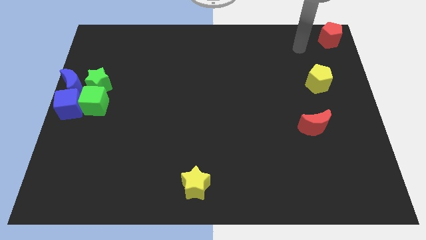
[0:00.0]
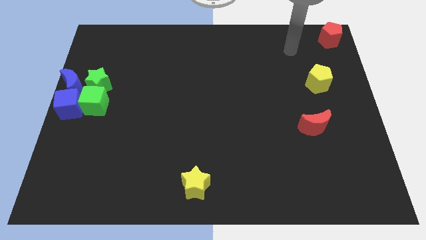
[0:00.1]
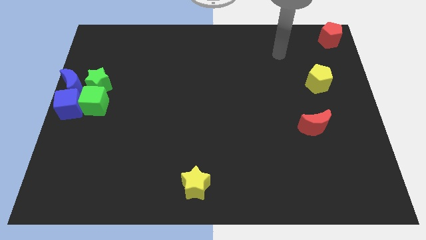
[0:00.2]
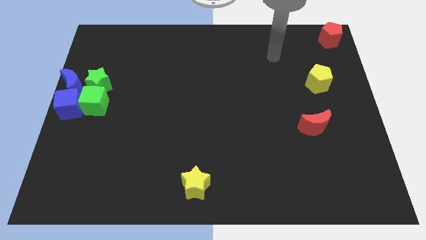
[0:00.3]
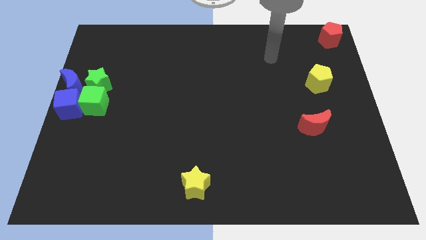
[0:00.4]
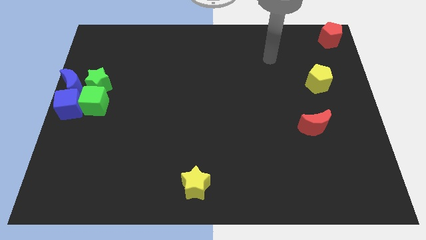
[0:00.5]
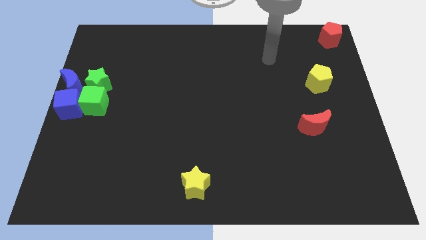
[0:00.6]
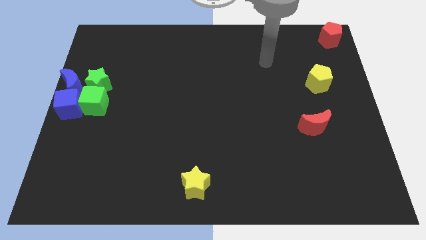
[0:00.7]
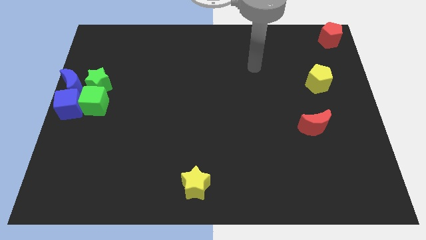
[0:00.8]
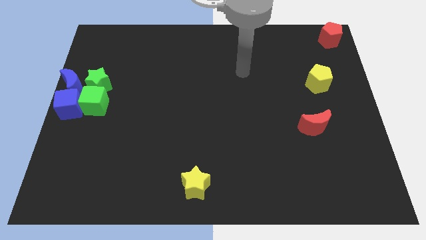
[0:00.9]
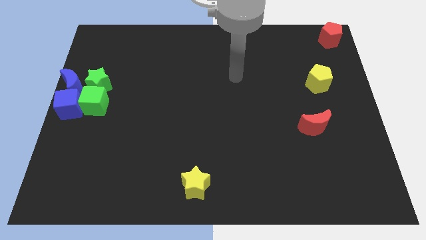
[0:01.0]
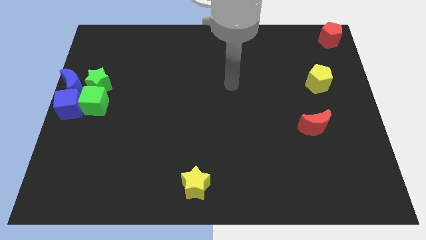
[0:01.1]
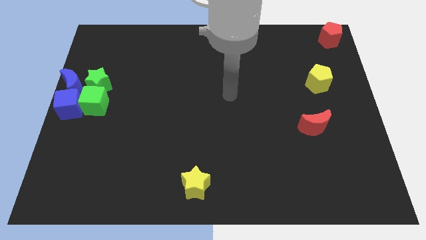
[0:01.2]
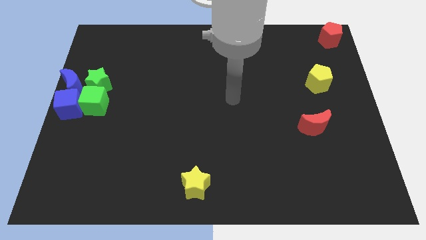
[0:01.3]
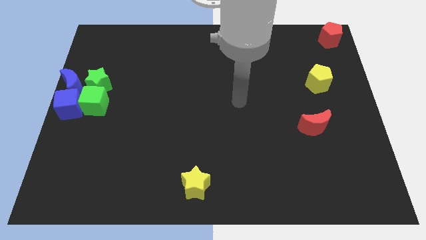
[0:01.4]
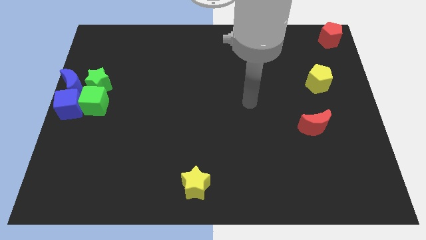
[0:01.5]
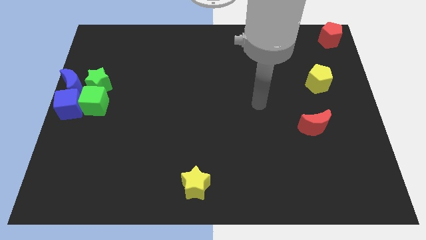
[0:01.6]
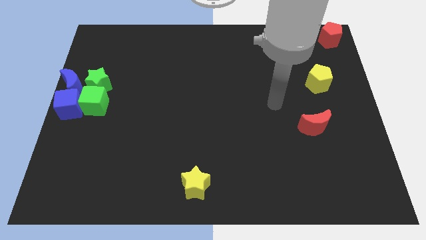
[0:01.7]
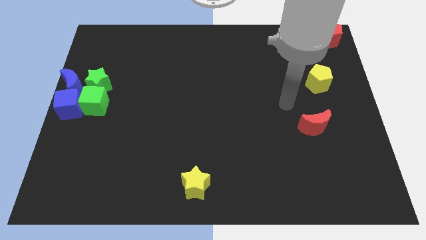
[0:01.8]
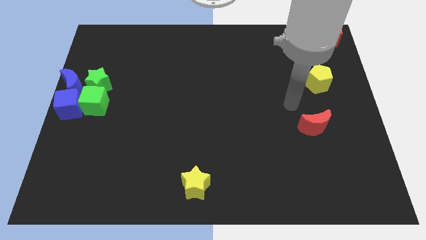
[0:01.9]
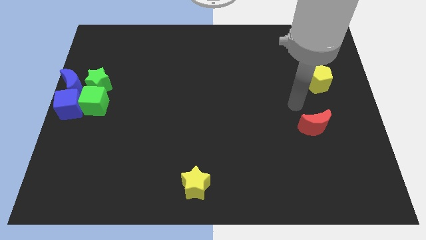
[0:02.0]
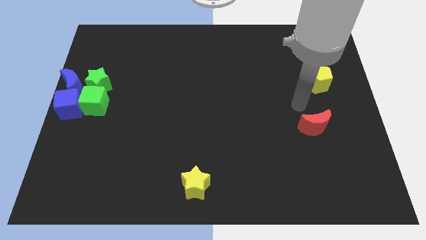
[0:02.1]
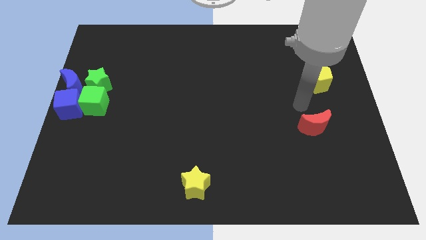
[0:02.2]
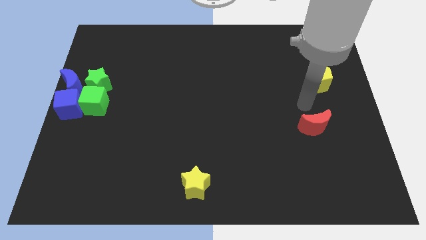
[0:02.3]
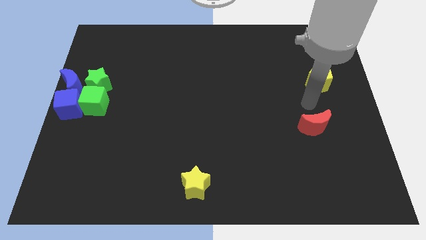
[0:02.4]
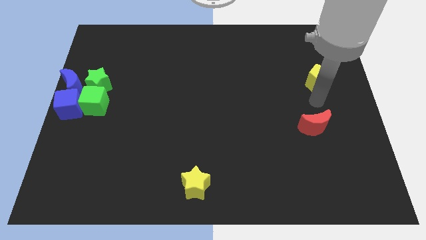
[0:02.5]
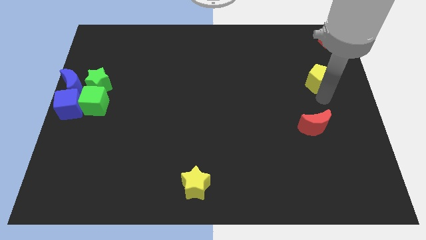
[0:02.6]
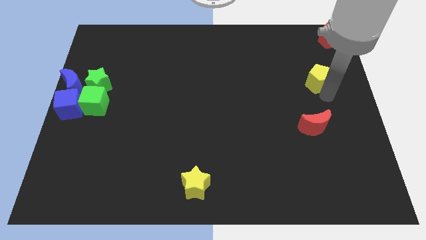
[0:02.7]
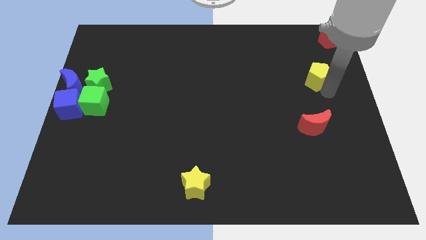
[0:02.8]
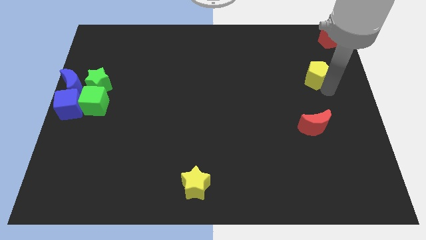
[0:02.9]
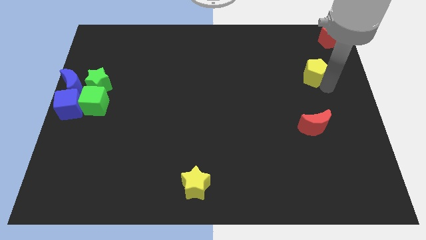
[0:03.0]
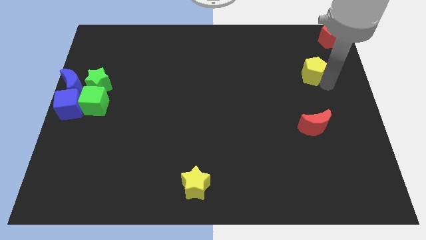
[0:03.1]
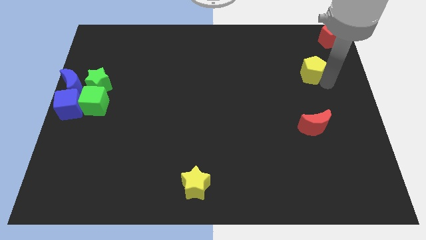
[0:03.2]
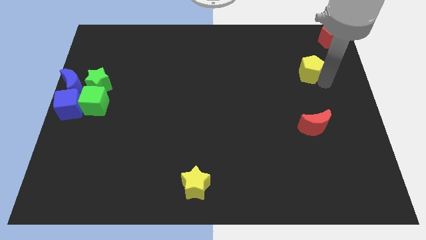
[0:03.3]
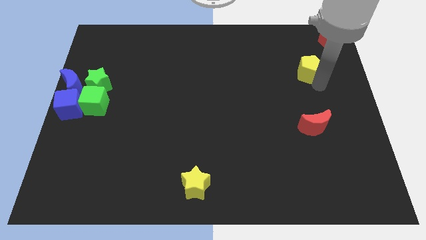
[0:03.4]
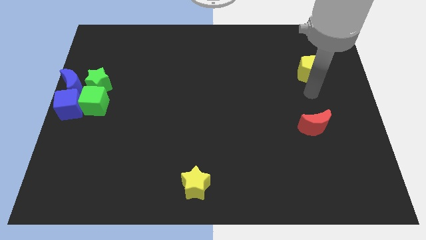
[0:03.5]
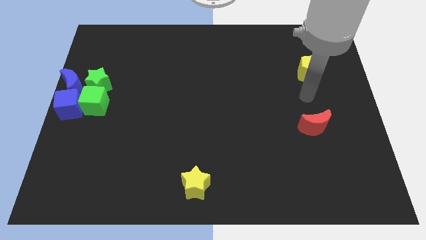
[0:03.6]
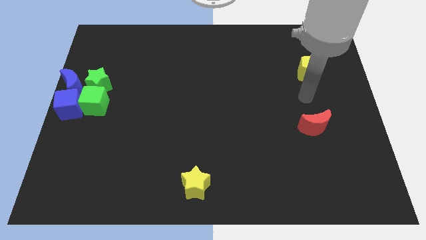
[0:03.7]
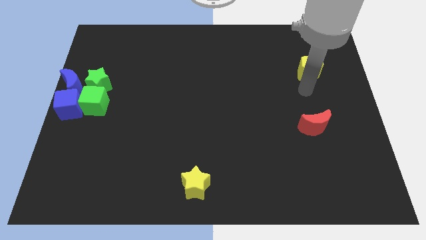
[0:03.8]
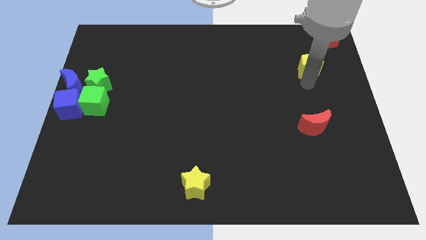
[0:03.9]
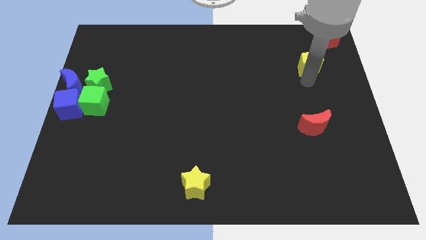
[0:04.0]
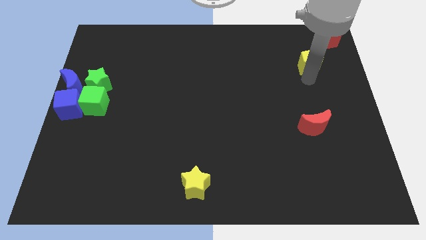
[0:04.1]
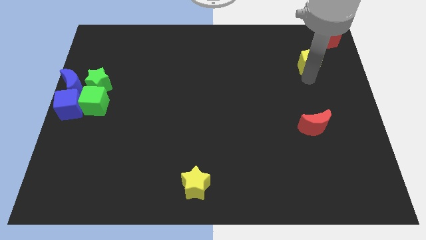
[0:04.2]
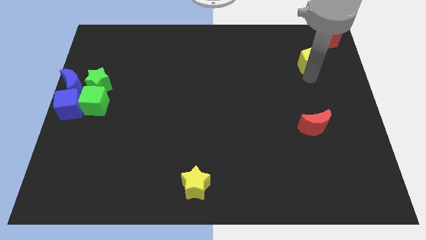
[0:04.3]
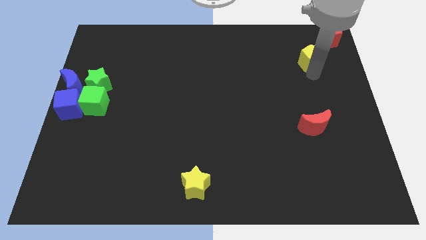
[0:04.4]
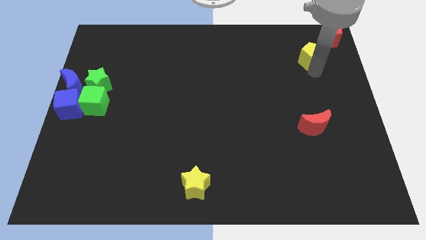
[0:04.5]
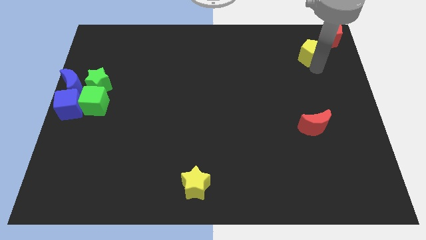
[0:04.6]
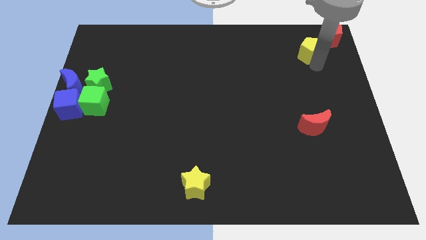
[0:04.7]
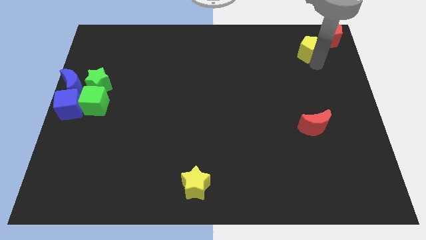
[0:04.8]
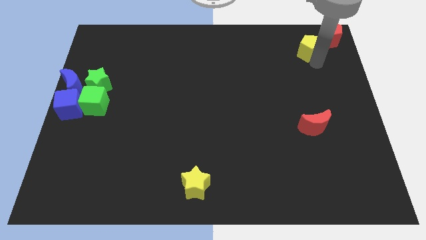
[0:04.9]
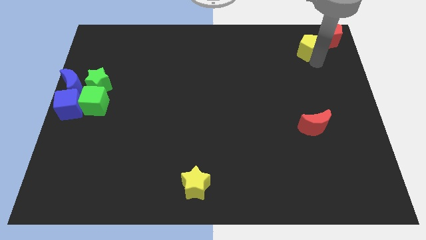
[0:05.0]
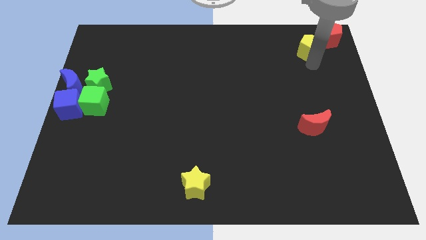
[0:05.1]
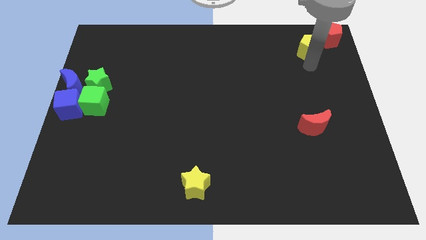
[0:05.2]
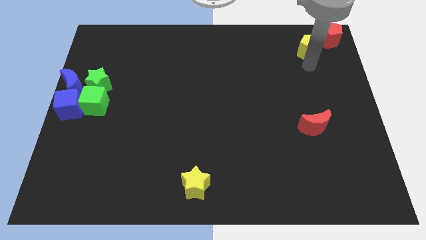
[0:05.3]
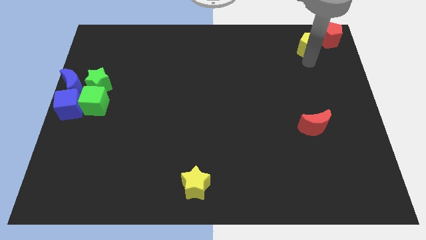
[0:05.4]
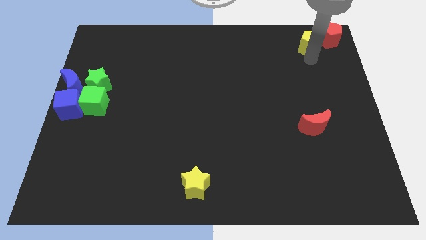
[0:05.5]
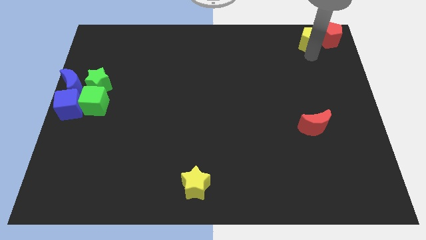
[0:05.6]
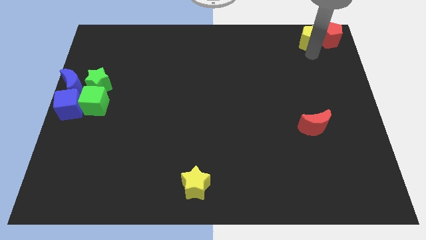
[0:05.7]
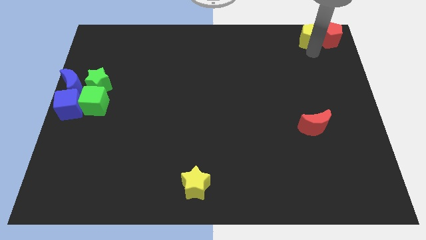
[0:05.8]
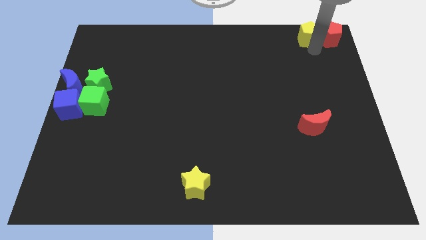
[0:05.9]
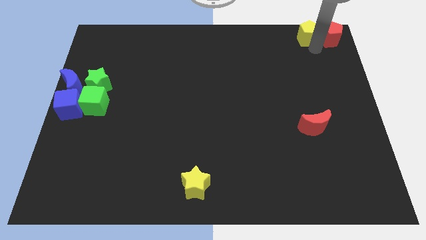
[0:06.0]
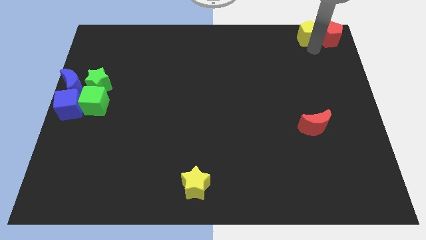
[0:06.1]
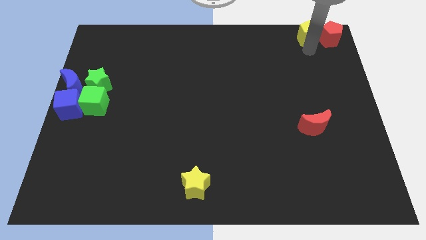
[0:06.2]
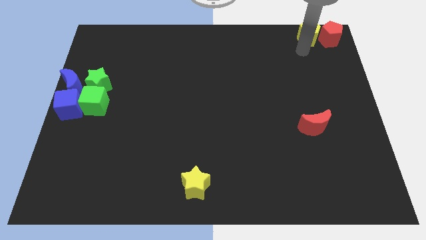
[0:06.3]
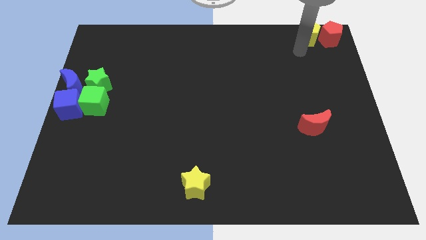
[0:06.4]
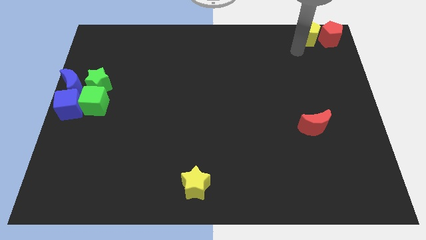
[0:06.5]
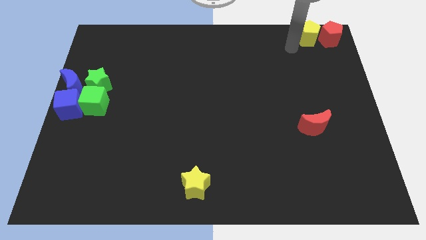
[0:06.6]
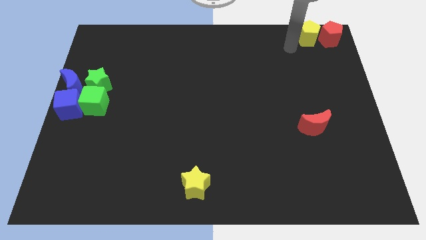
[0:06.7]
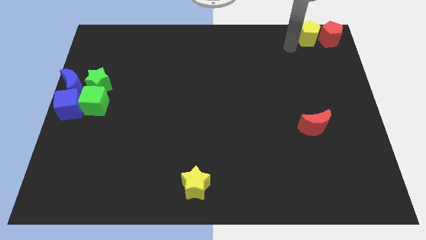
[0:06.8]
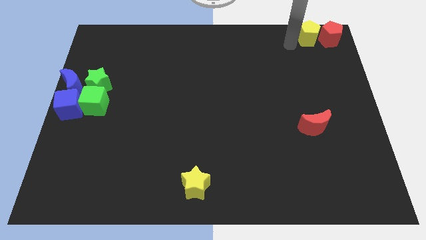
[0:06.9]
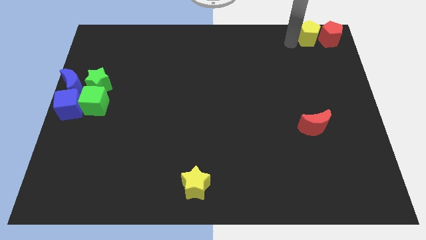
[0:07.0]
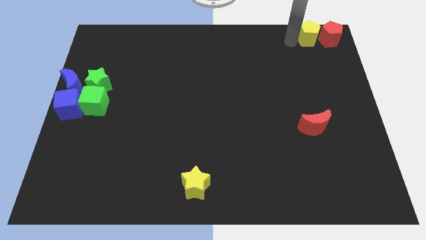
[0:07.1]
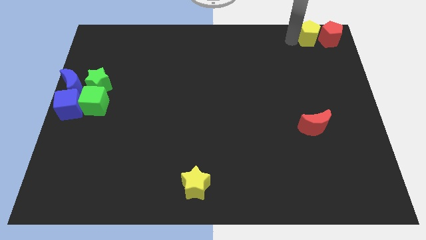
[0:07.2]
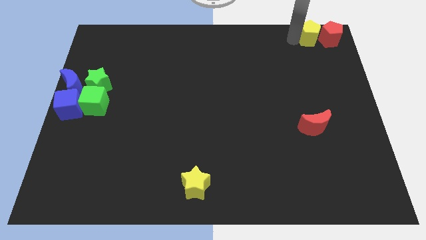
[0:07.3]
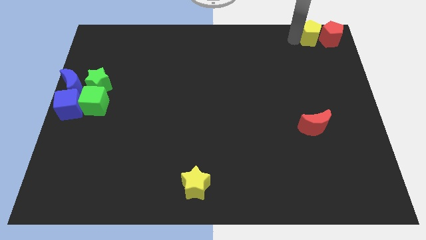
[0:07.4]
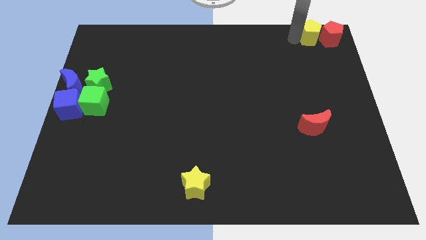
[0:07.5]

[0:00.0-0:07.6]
move the yellow pentagon to left of red pentagon

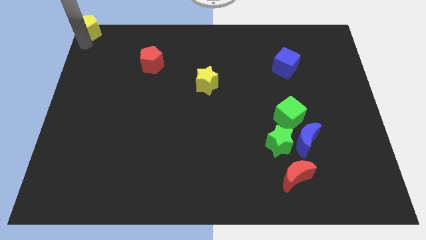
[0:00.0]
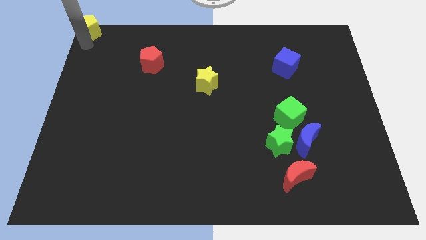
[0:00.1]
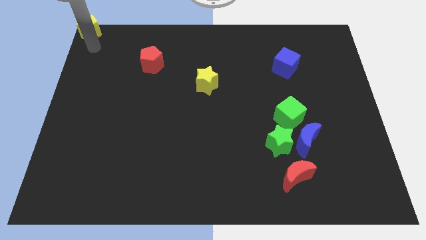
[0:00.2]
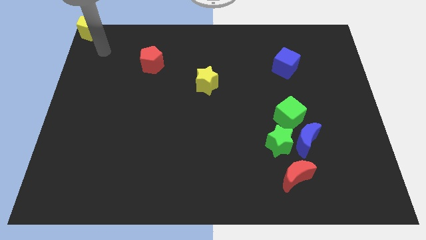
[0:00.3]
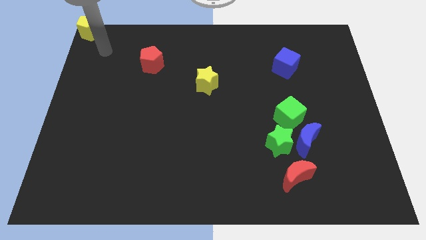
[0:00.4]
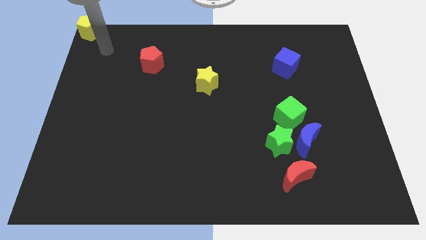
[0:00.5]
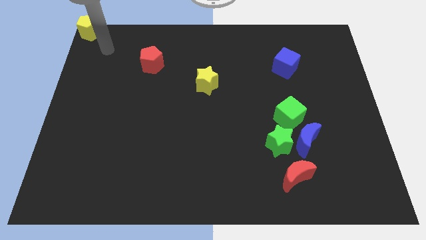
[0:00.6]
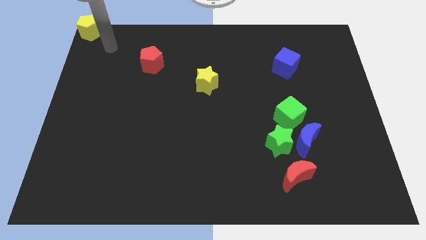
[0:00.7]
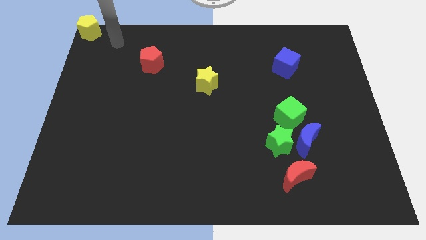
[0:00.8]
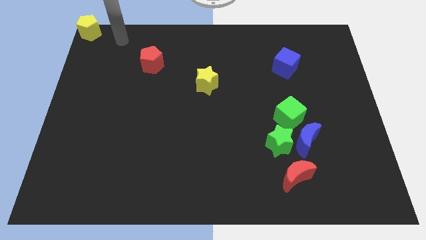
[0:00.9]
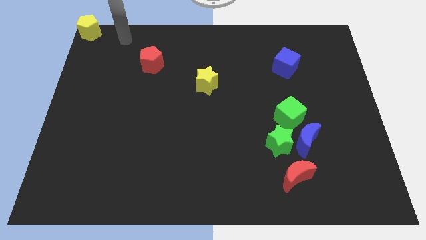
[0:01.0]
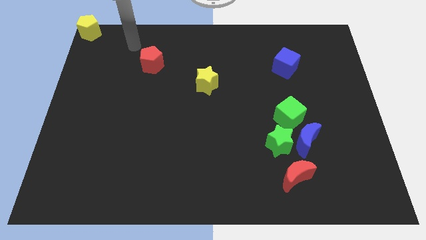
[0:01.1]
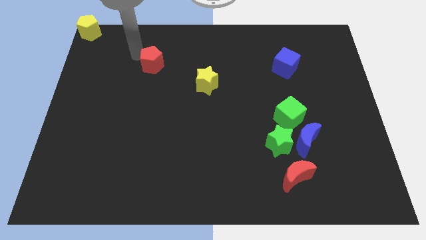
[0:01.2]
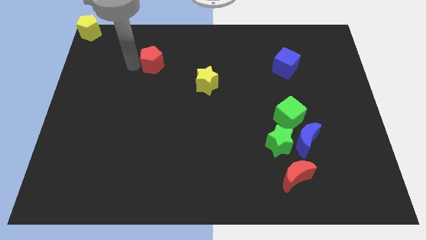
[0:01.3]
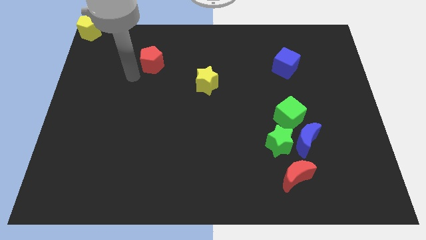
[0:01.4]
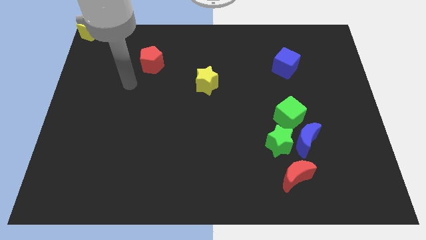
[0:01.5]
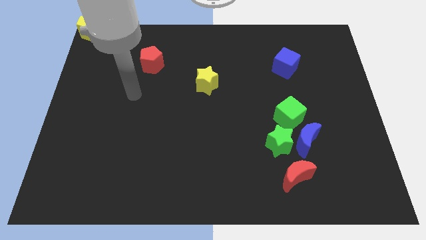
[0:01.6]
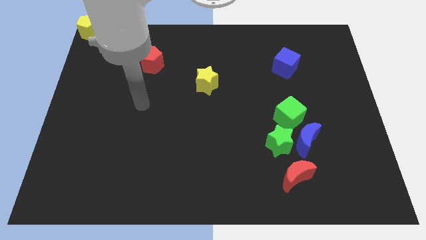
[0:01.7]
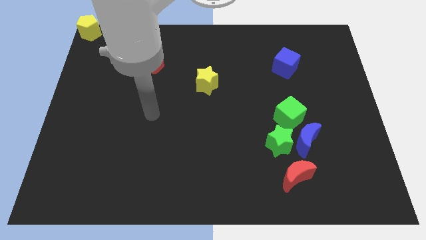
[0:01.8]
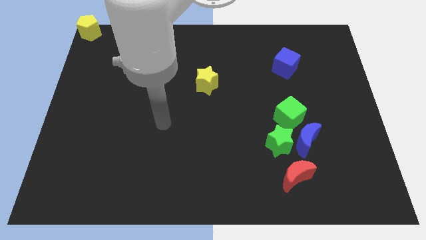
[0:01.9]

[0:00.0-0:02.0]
move your arm away from the yellow pentagon
